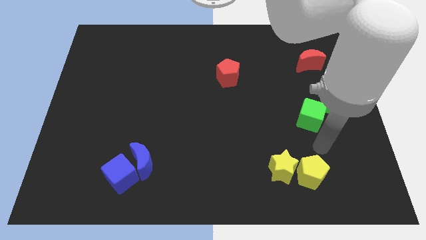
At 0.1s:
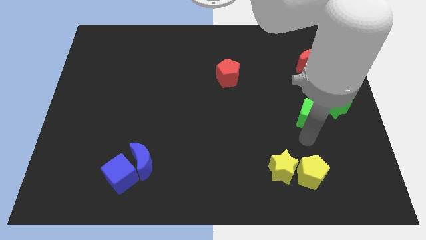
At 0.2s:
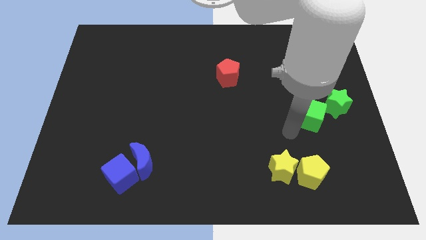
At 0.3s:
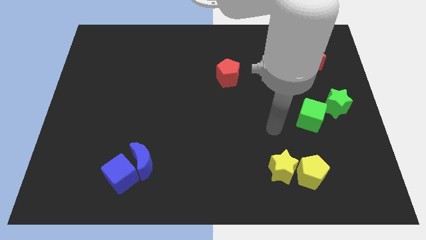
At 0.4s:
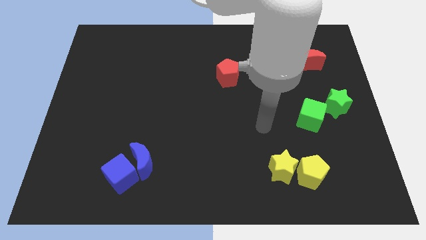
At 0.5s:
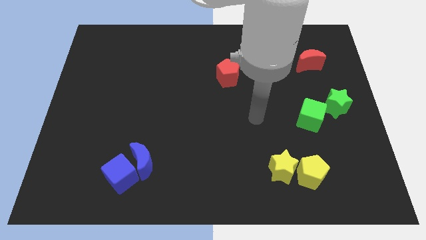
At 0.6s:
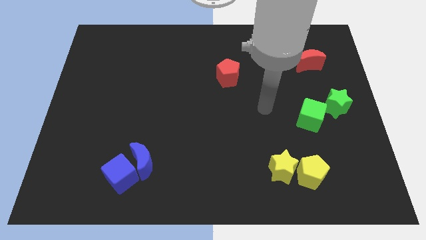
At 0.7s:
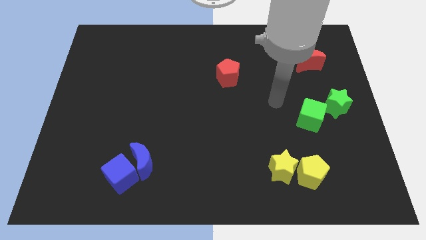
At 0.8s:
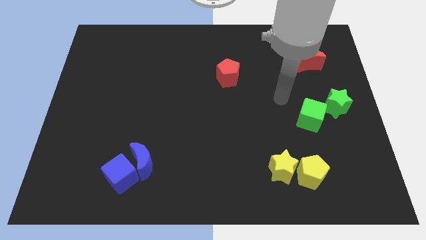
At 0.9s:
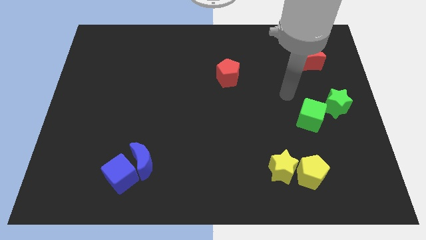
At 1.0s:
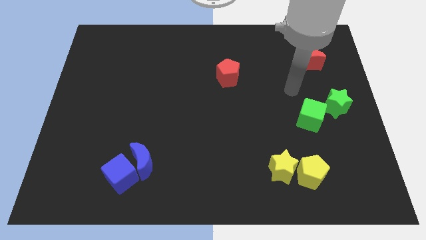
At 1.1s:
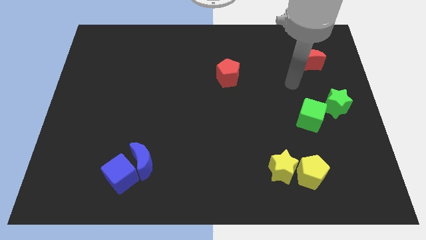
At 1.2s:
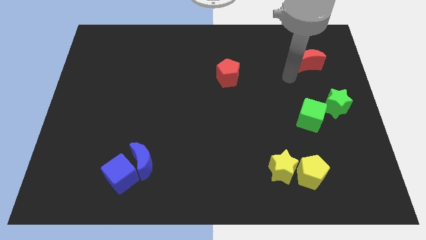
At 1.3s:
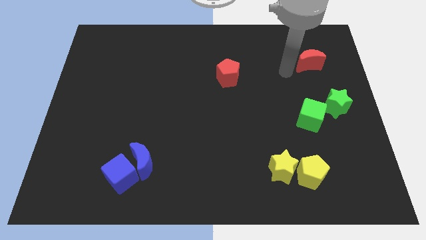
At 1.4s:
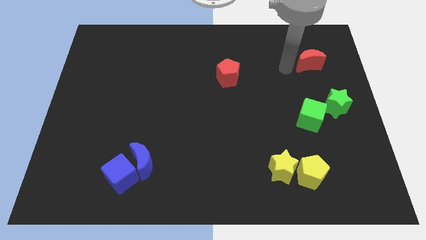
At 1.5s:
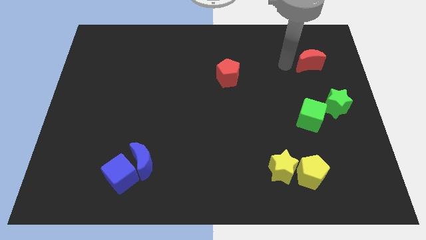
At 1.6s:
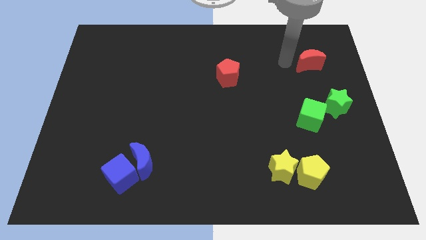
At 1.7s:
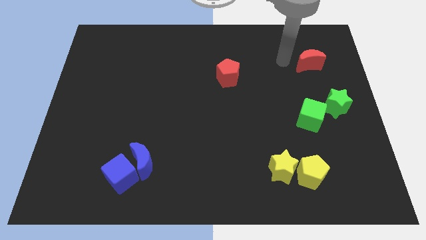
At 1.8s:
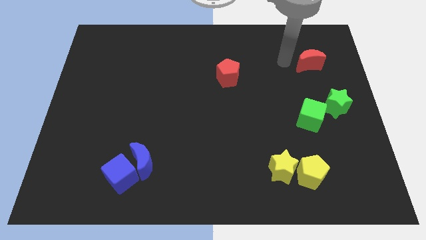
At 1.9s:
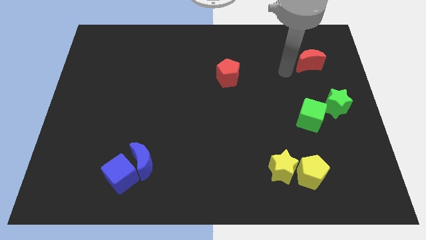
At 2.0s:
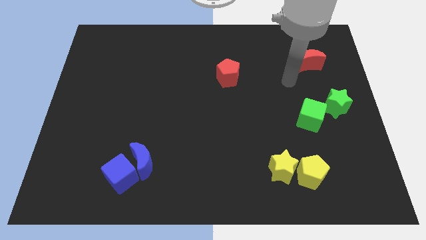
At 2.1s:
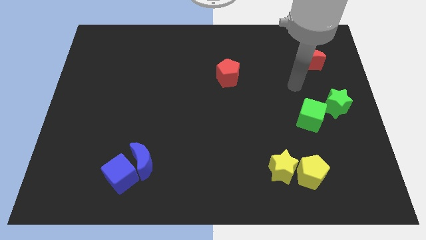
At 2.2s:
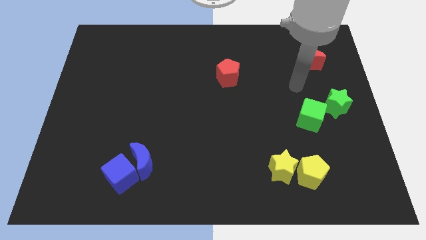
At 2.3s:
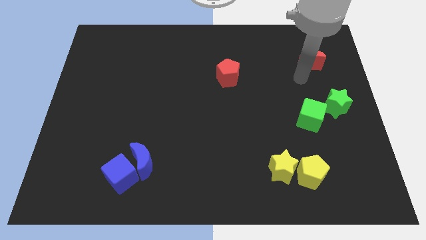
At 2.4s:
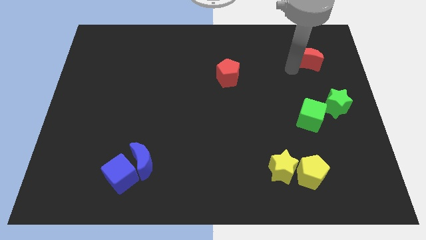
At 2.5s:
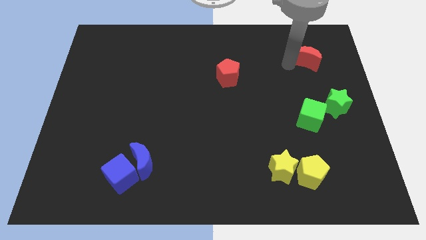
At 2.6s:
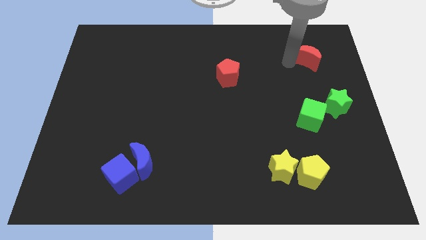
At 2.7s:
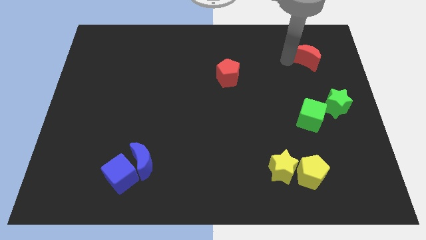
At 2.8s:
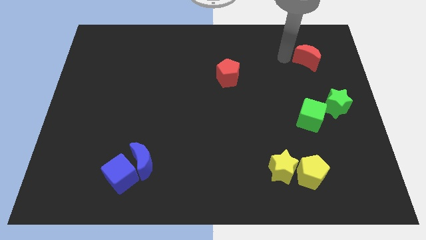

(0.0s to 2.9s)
move the red moon slightly upwards

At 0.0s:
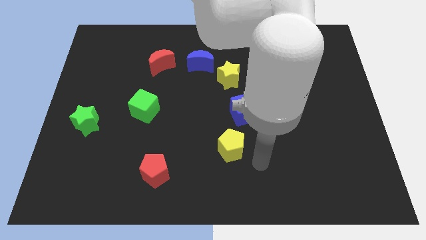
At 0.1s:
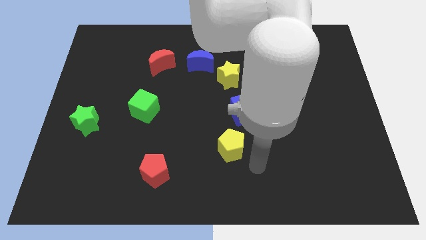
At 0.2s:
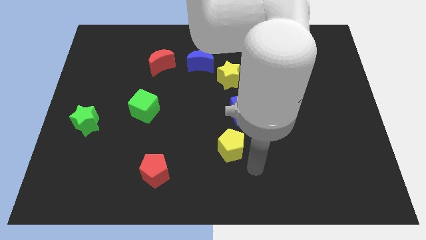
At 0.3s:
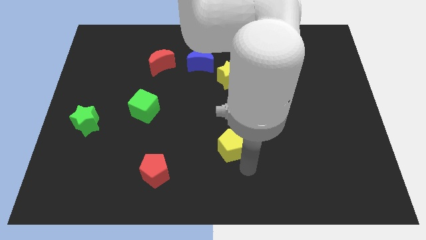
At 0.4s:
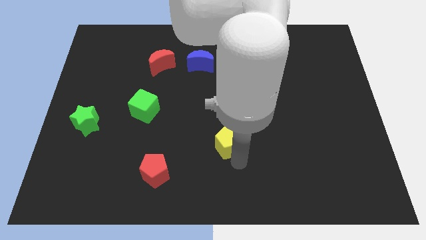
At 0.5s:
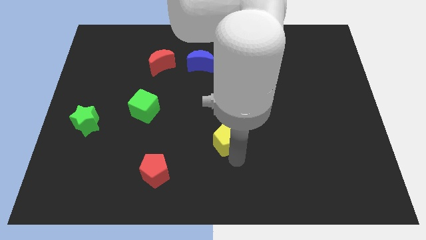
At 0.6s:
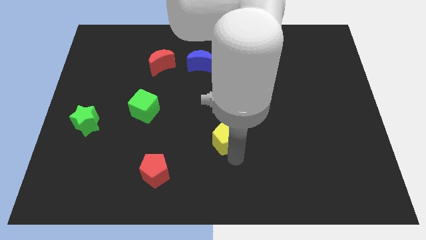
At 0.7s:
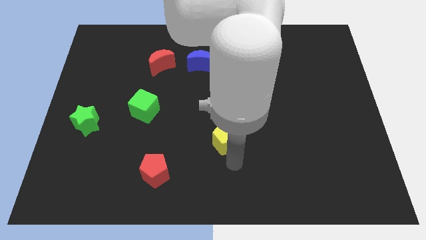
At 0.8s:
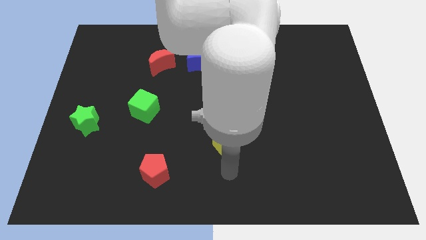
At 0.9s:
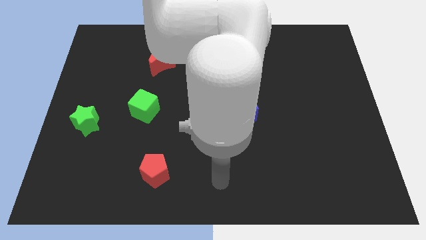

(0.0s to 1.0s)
slightly move the yellow pentagon towards up

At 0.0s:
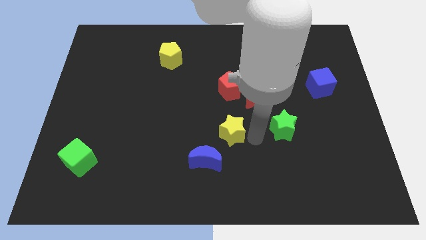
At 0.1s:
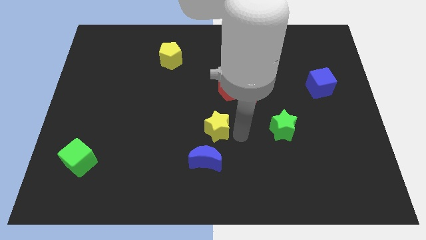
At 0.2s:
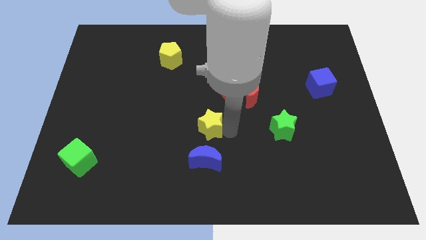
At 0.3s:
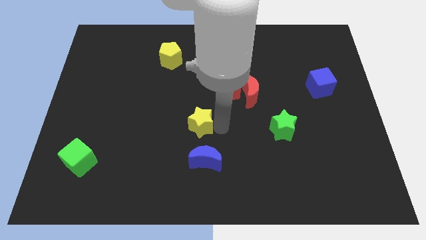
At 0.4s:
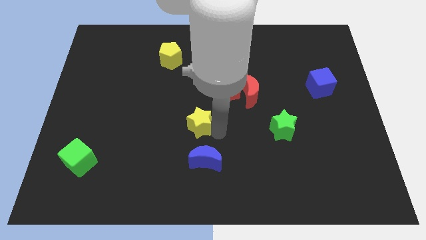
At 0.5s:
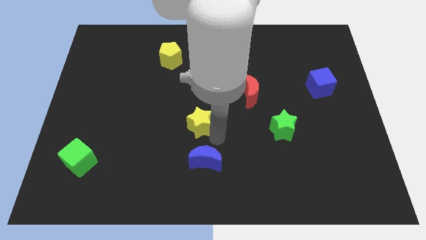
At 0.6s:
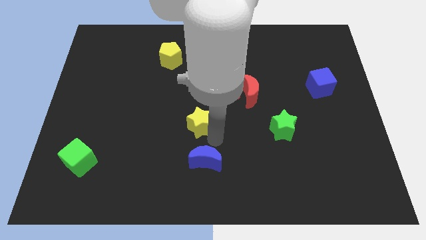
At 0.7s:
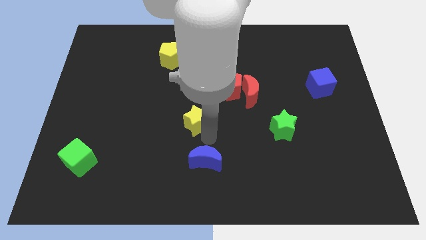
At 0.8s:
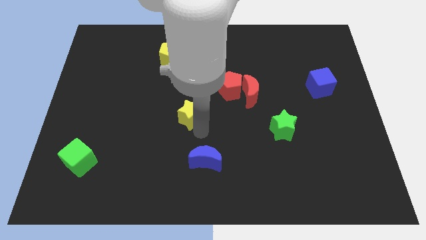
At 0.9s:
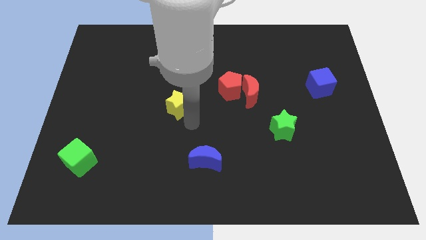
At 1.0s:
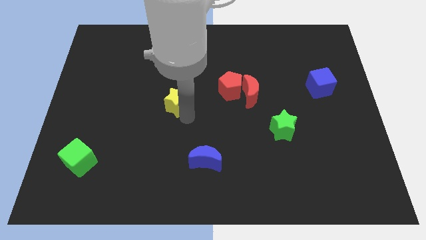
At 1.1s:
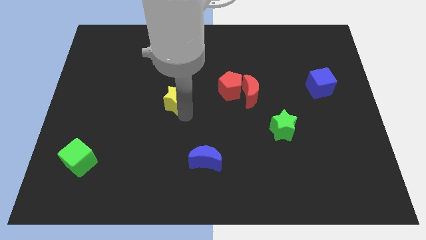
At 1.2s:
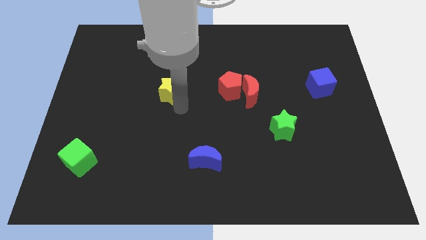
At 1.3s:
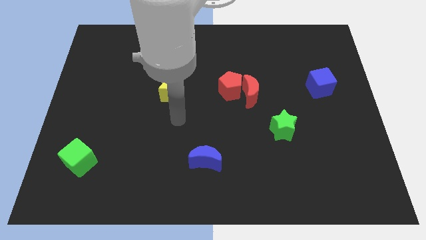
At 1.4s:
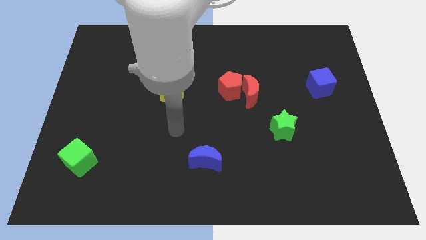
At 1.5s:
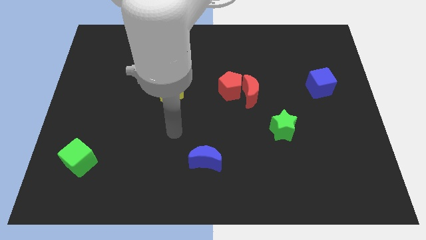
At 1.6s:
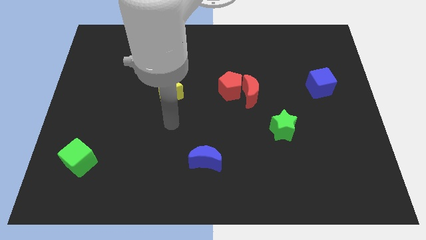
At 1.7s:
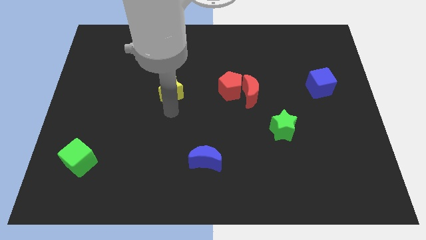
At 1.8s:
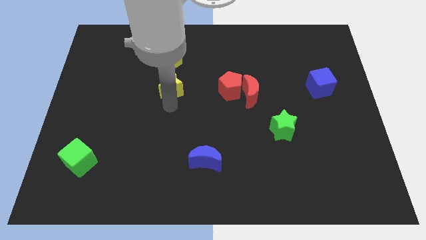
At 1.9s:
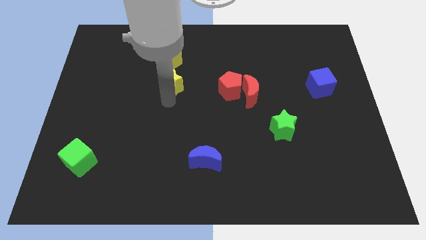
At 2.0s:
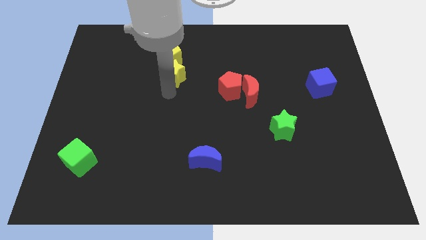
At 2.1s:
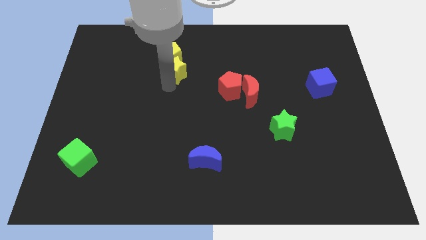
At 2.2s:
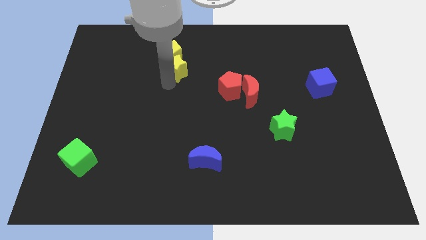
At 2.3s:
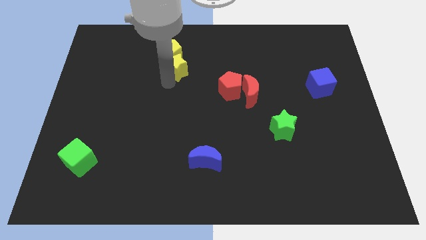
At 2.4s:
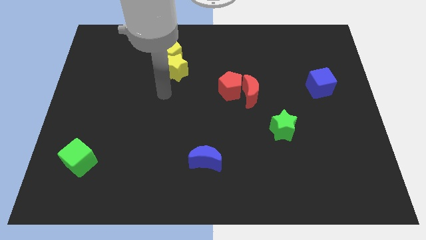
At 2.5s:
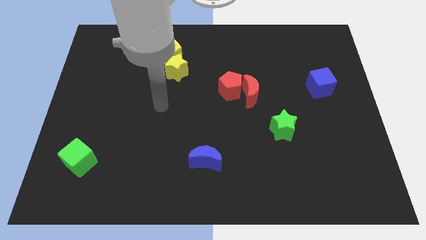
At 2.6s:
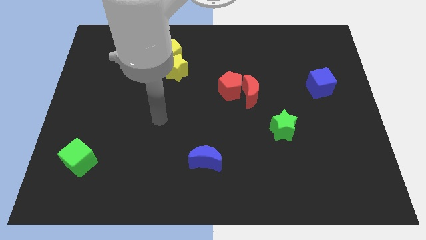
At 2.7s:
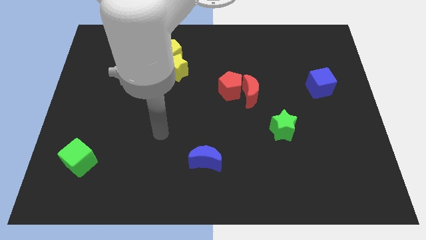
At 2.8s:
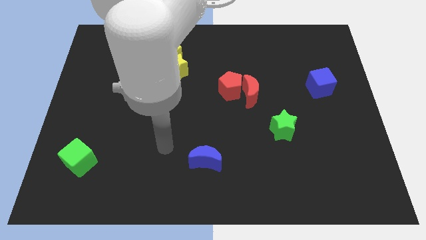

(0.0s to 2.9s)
push the yellow star below the yellow pentagon

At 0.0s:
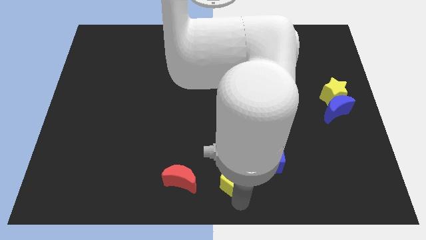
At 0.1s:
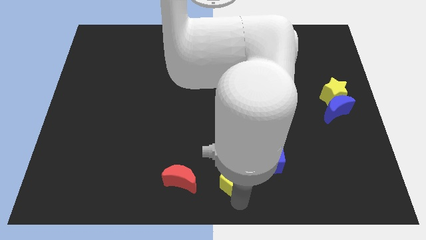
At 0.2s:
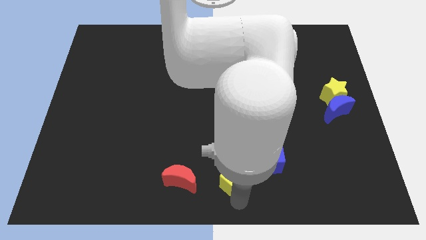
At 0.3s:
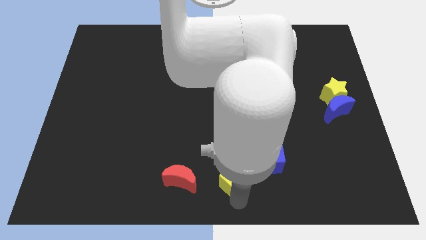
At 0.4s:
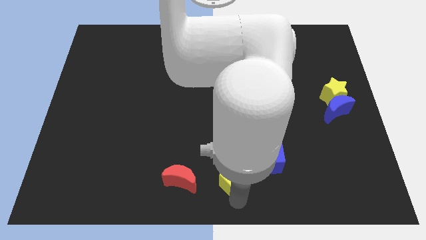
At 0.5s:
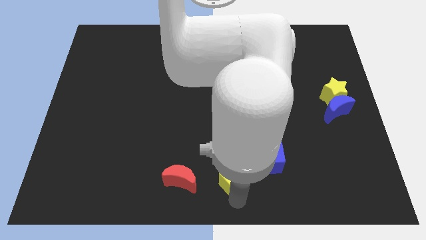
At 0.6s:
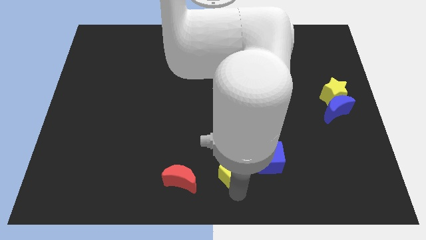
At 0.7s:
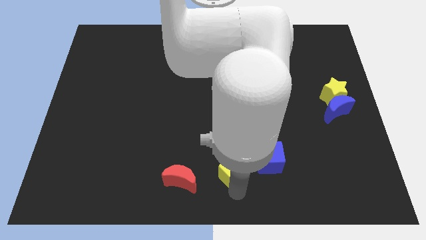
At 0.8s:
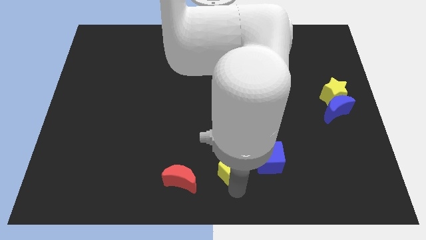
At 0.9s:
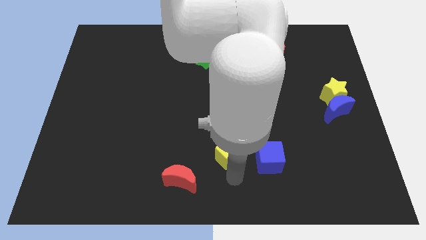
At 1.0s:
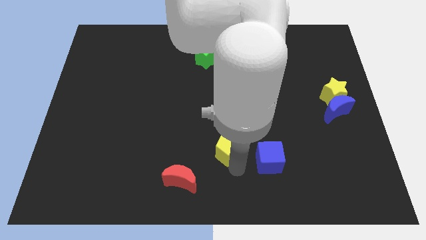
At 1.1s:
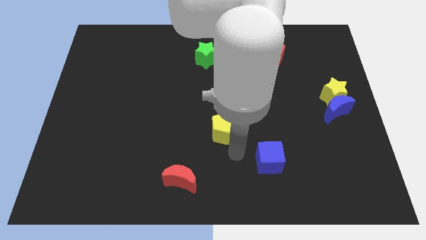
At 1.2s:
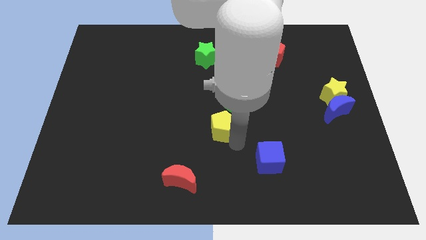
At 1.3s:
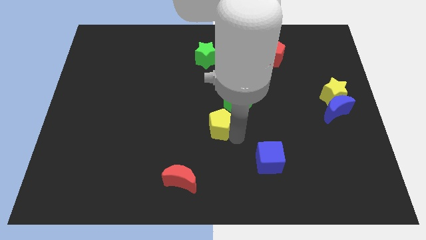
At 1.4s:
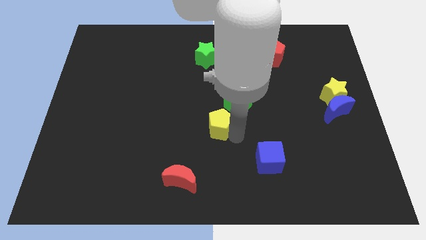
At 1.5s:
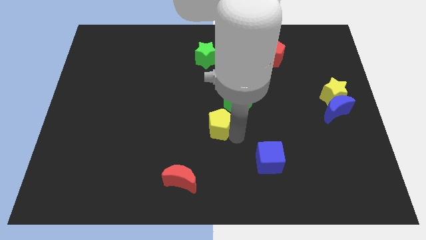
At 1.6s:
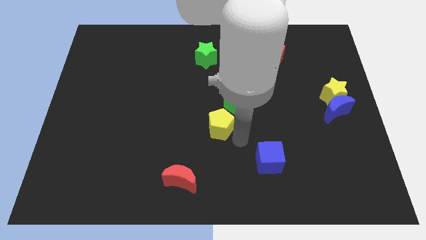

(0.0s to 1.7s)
move the yellow pentagon towards the top side

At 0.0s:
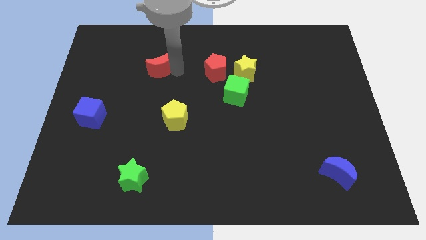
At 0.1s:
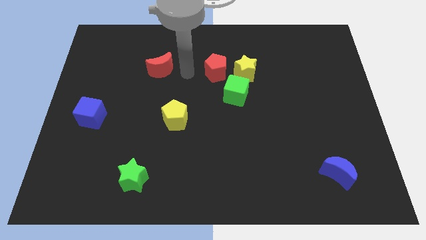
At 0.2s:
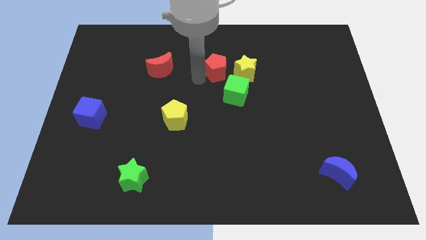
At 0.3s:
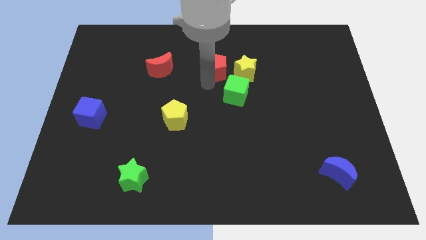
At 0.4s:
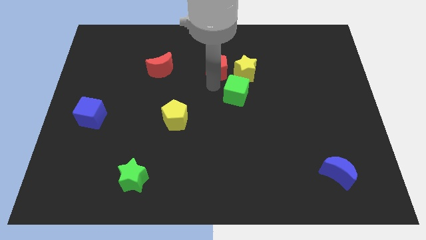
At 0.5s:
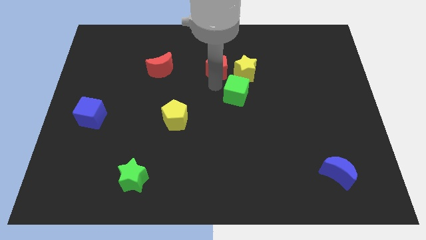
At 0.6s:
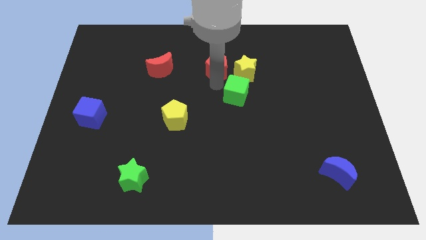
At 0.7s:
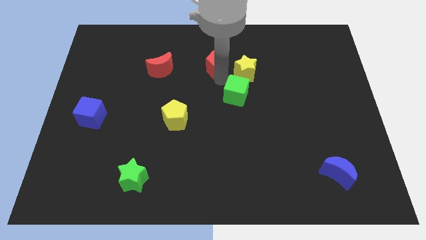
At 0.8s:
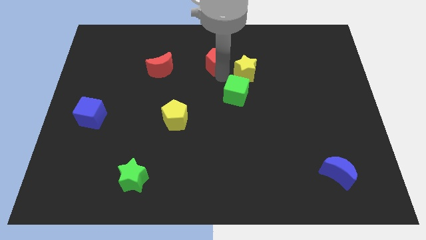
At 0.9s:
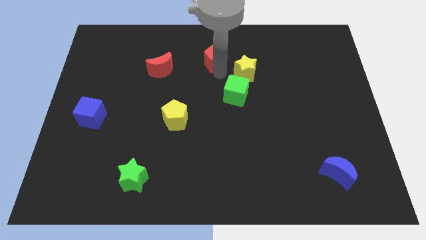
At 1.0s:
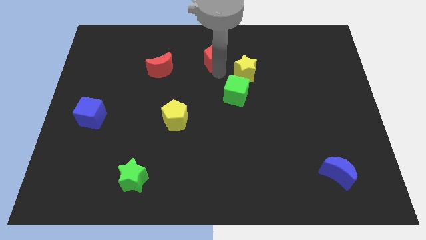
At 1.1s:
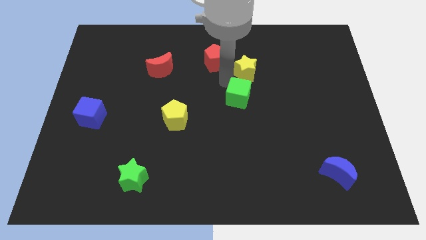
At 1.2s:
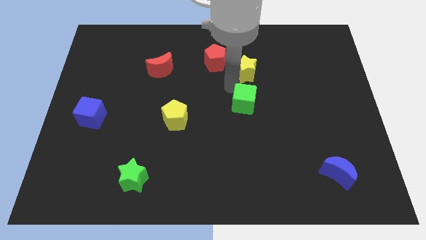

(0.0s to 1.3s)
push the red pentagon towards the top center
